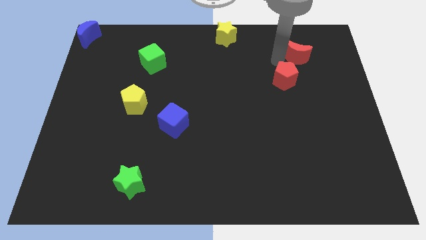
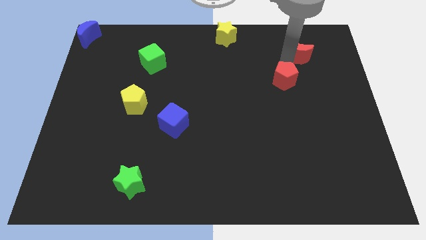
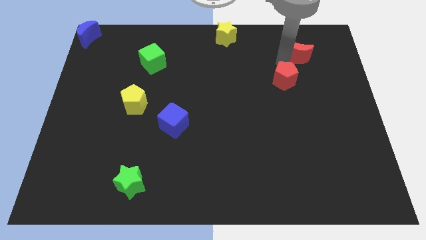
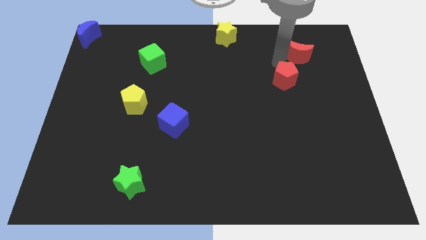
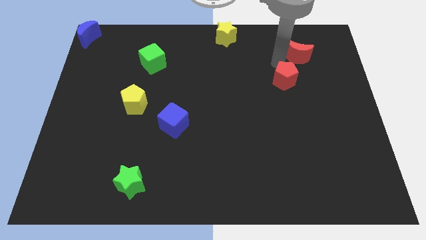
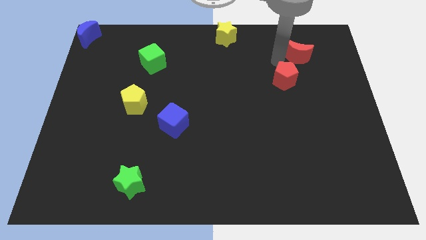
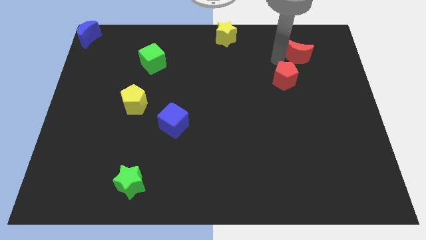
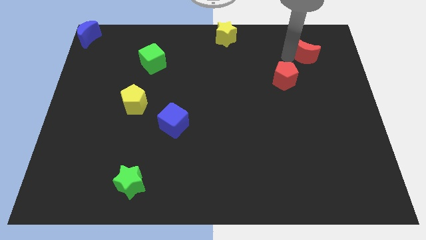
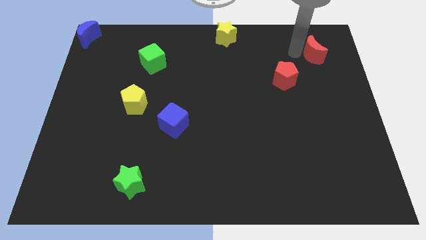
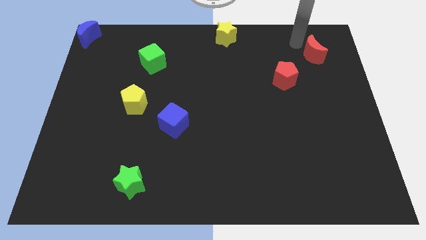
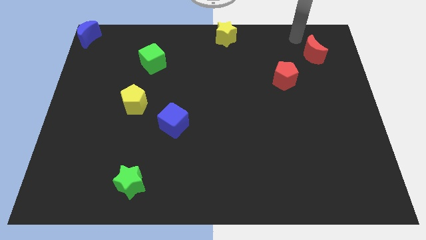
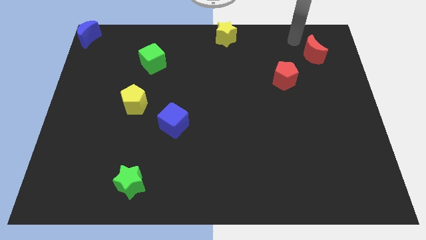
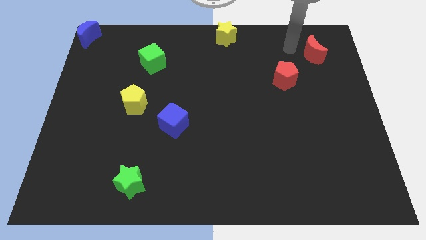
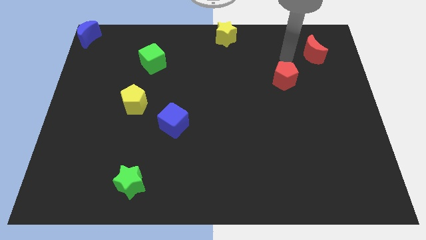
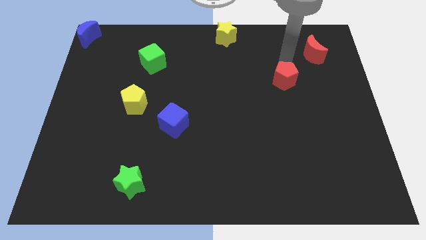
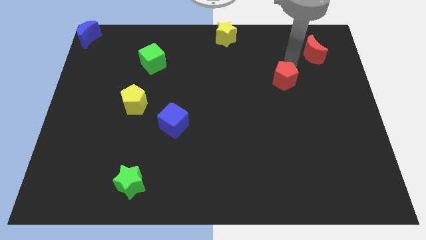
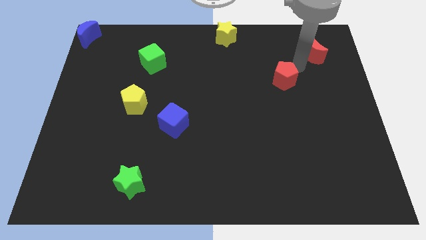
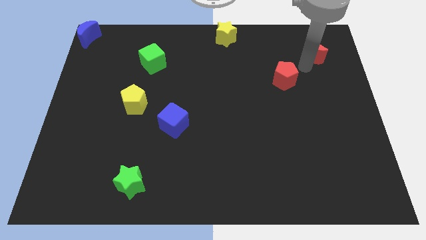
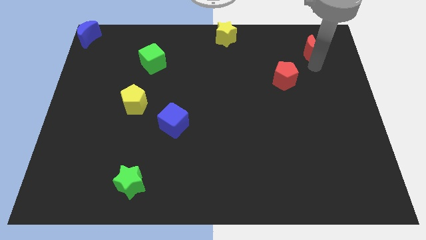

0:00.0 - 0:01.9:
move the red moon towards the top right corner

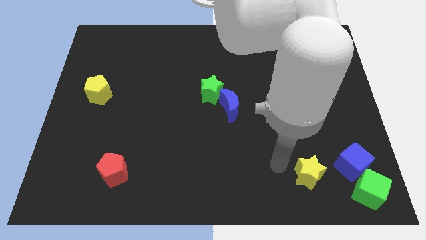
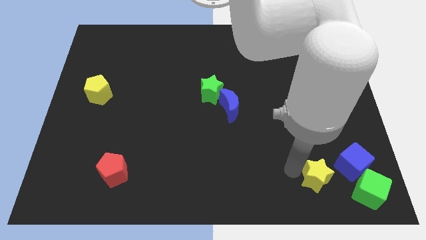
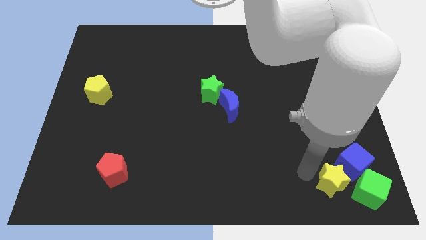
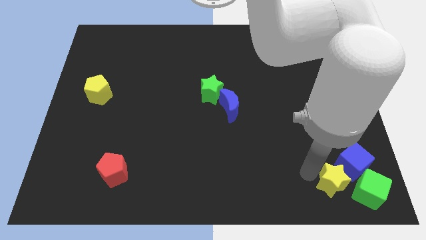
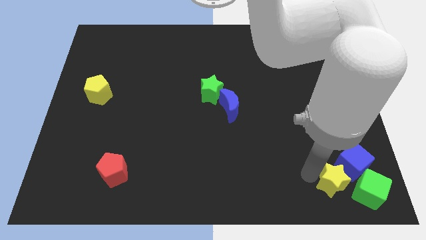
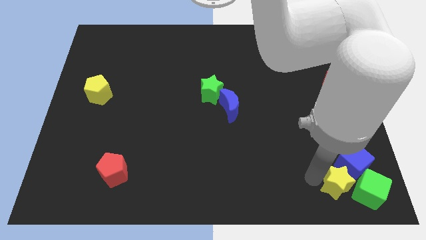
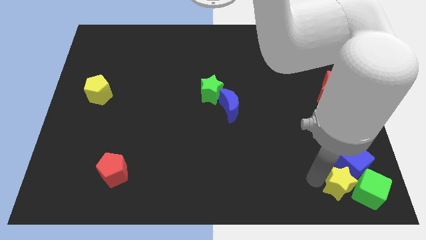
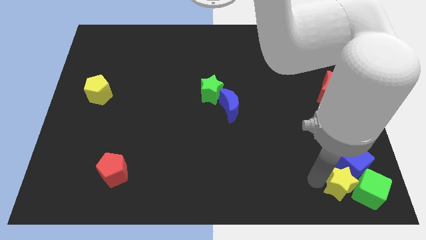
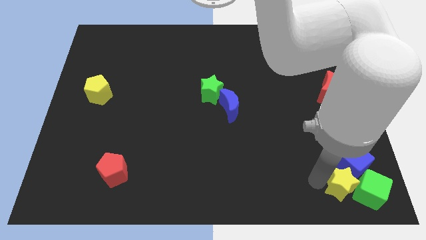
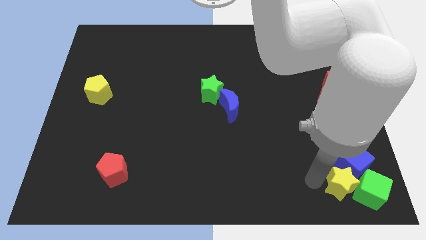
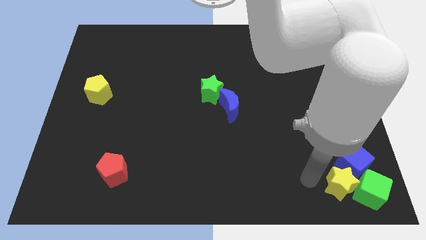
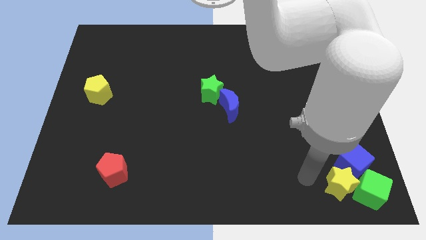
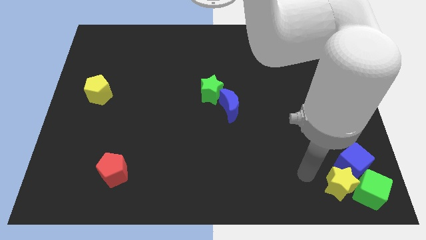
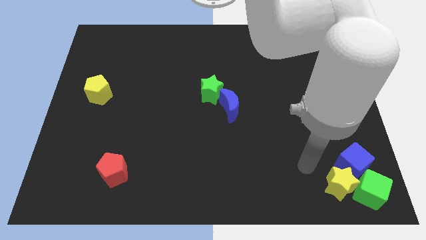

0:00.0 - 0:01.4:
push the yellow star into the green cube

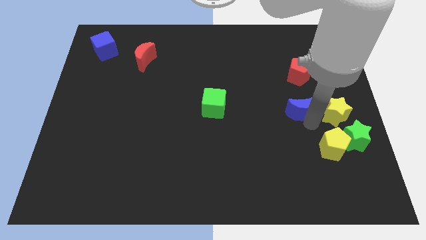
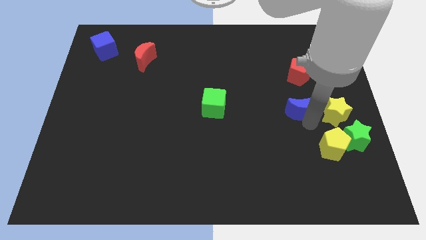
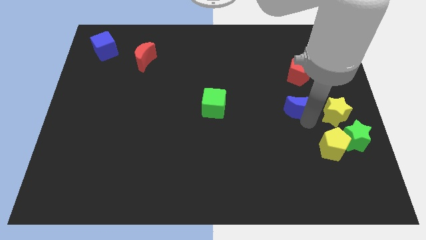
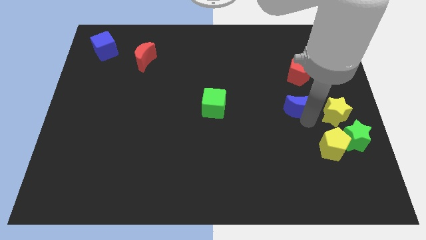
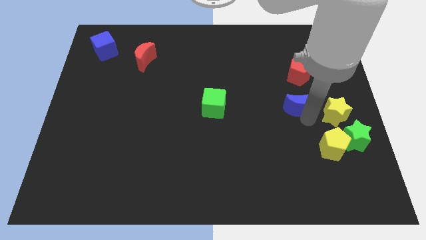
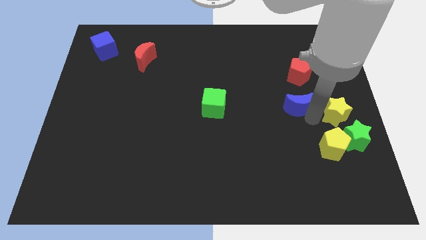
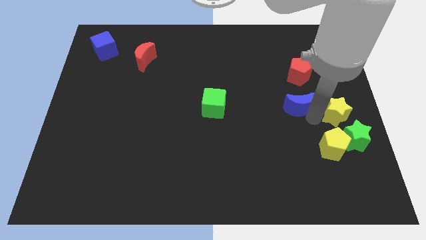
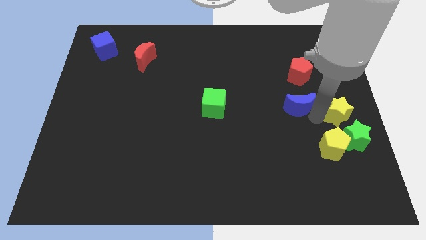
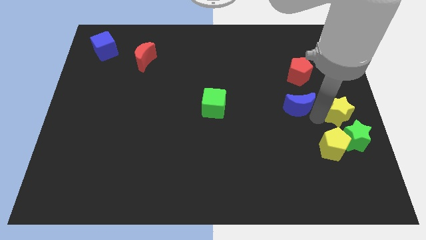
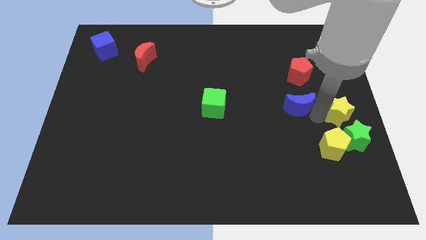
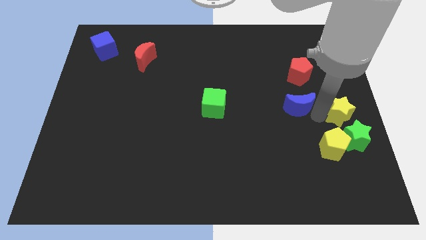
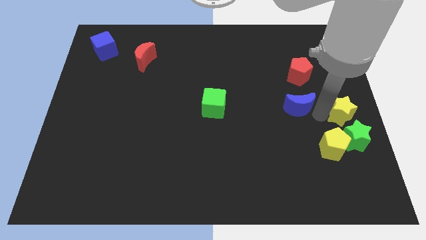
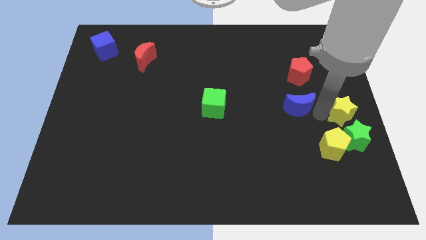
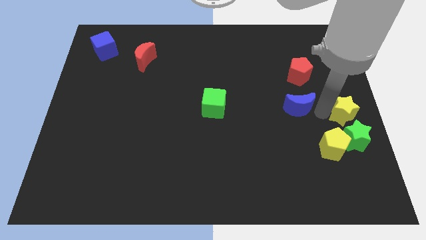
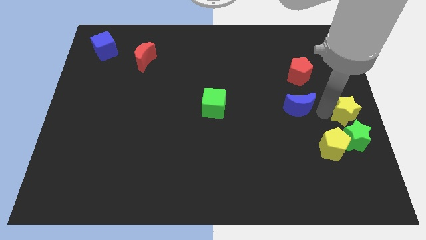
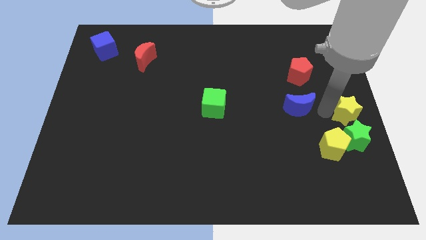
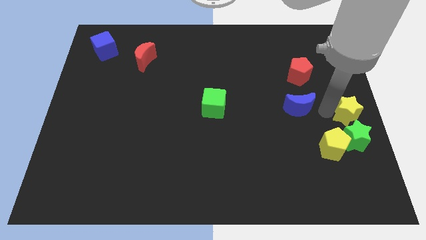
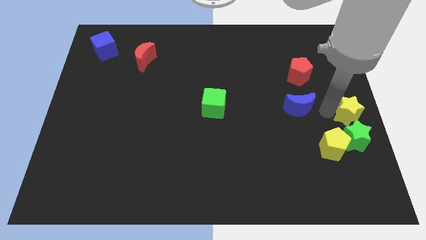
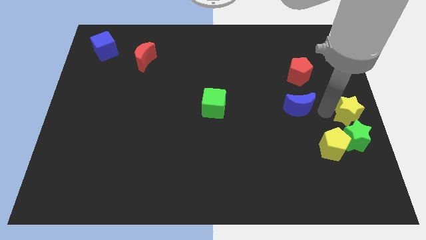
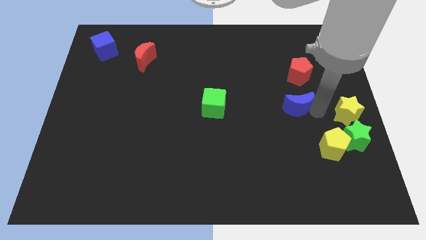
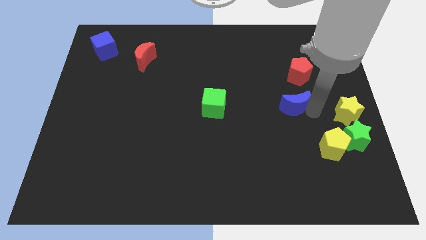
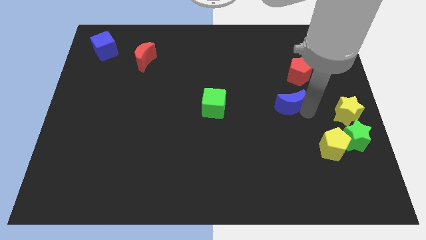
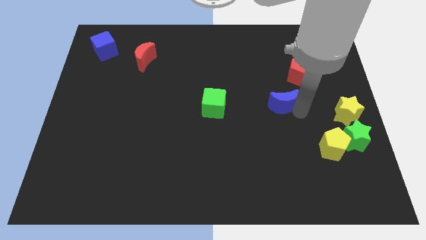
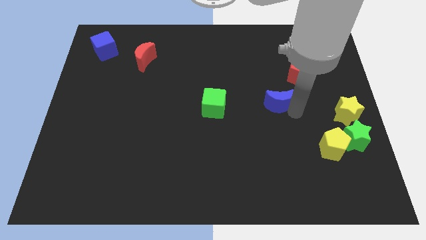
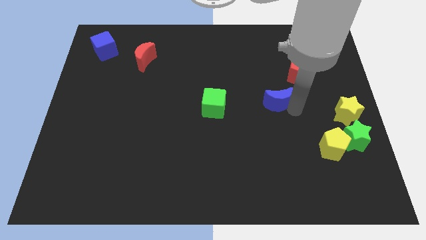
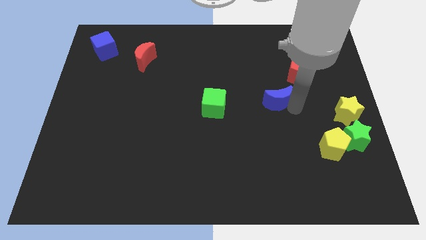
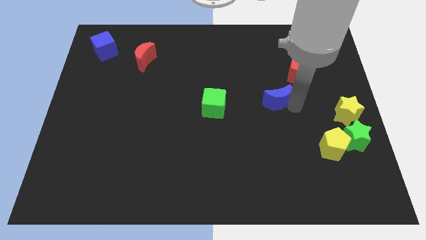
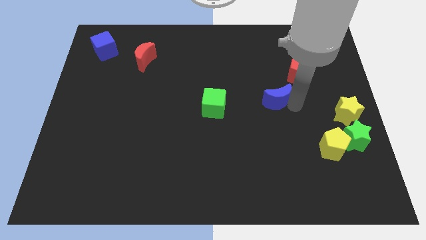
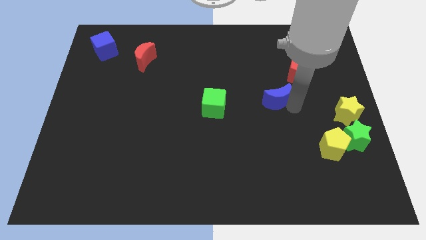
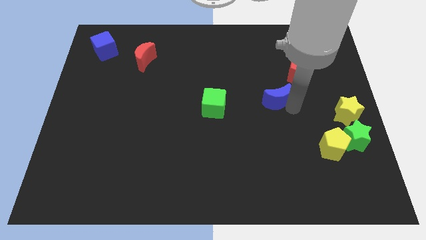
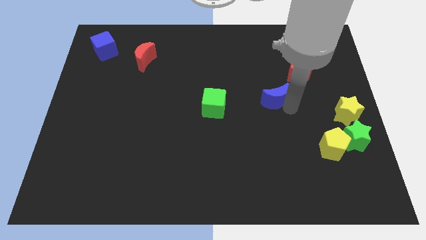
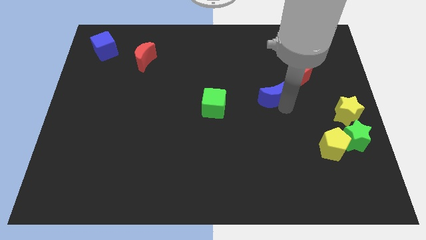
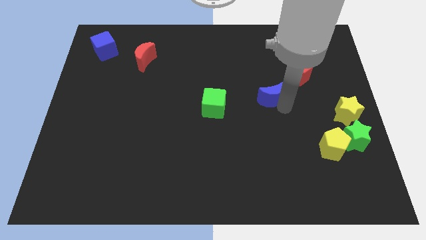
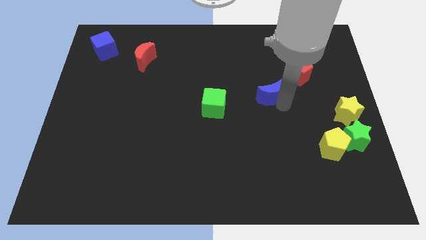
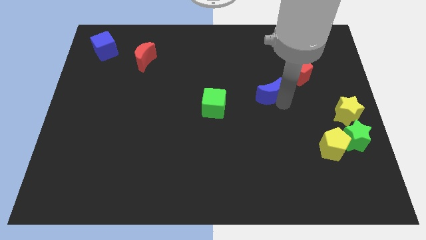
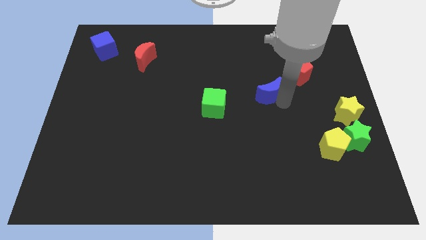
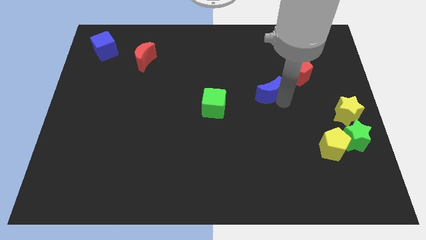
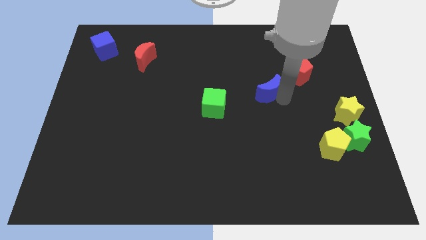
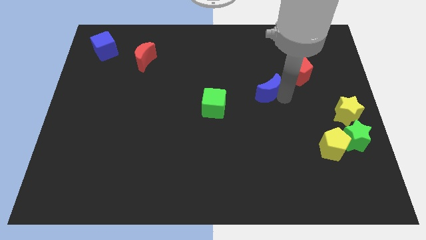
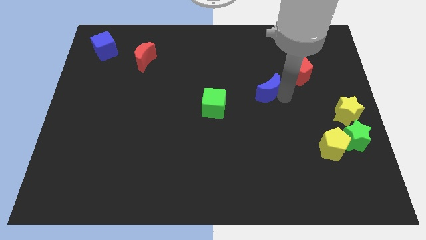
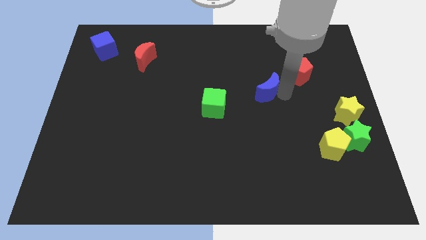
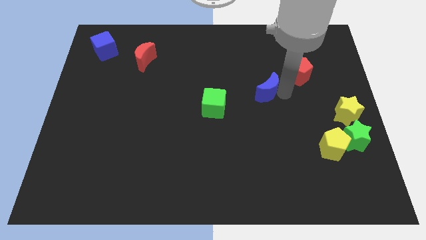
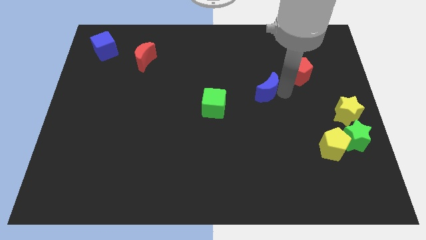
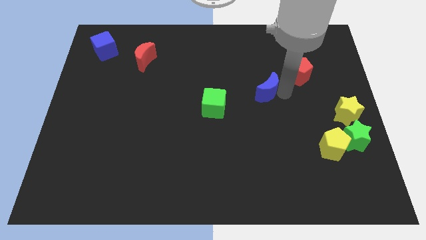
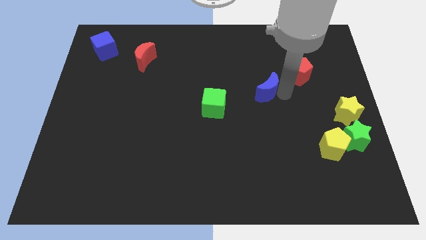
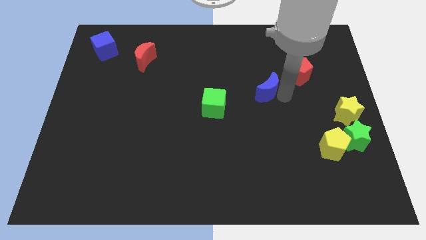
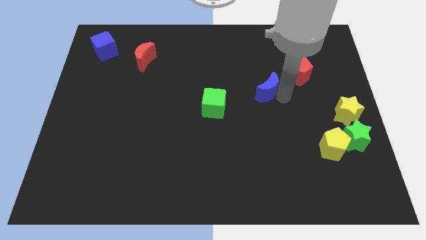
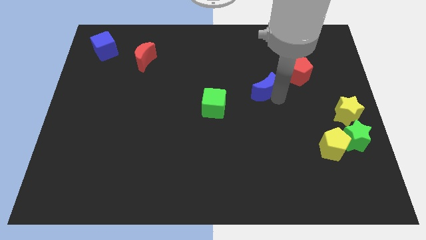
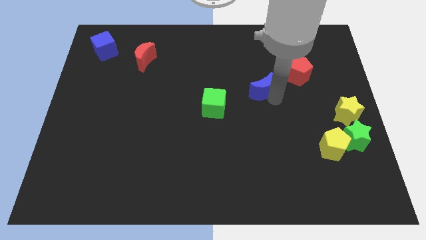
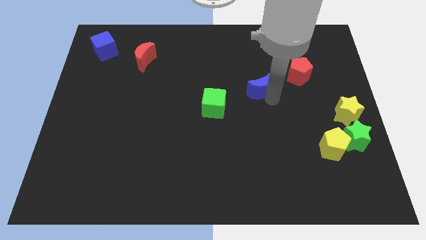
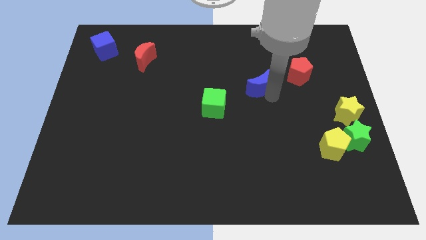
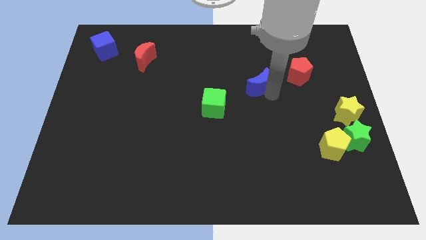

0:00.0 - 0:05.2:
place the blue moon in between the red pentagon and green cube

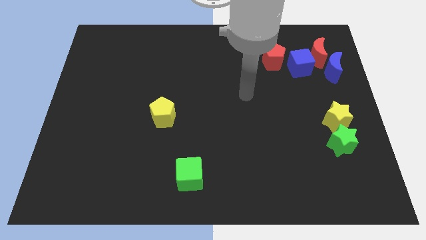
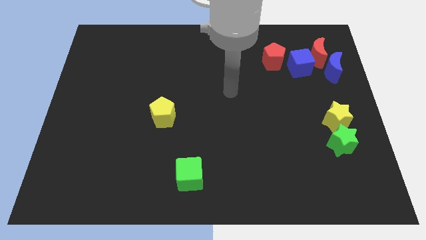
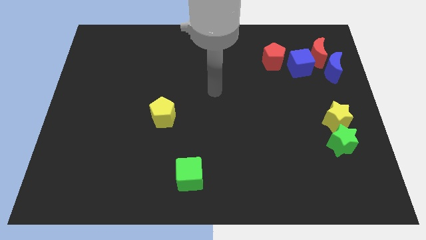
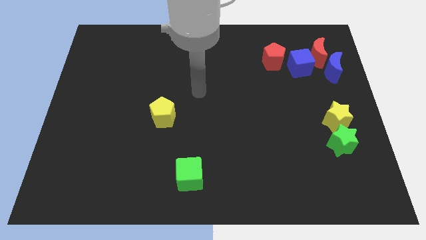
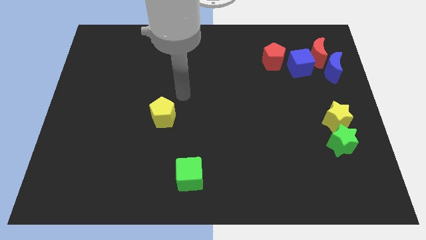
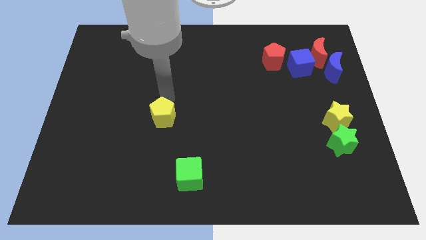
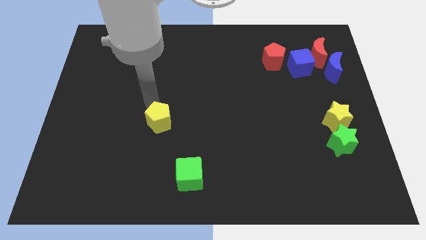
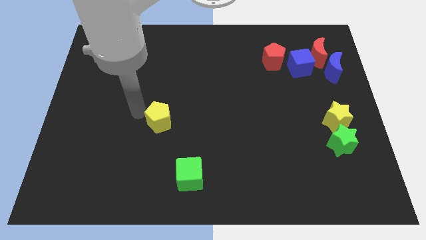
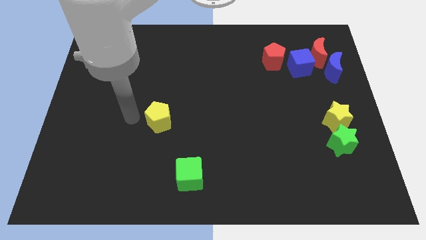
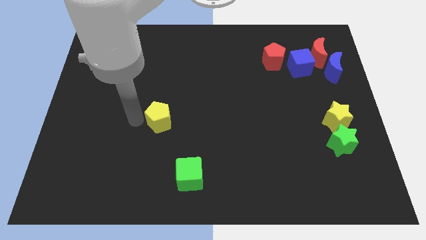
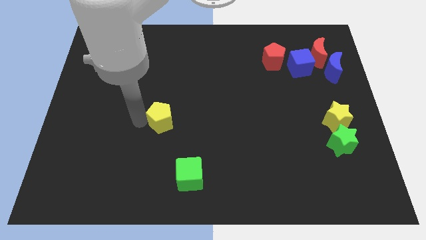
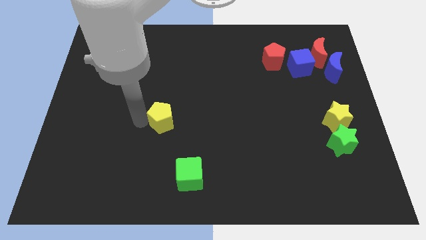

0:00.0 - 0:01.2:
push the yellow pentagon slightly towards center
